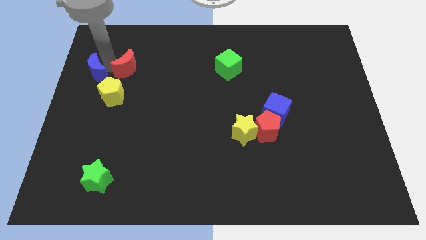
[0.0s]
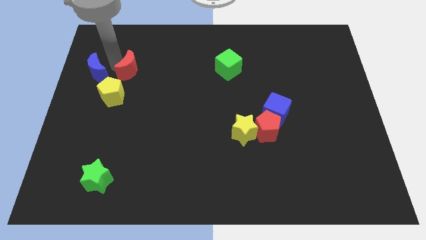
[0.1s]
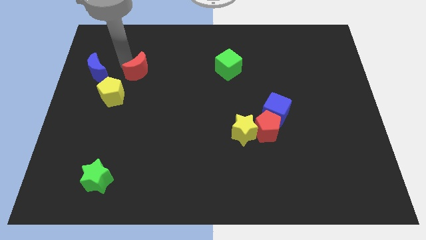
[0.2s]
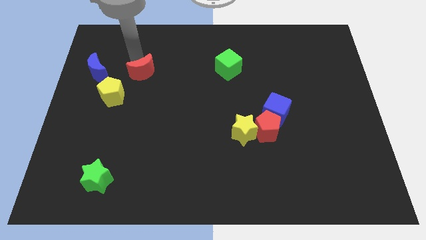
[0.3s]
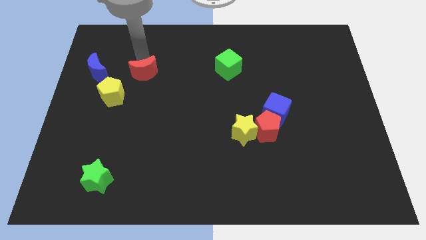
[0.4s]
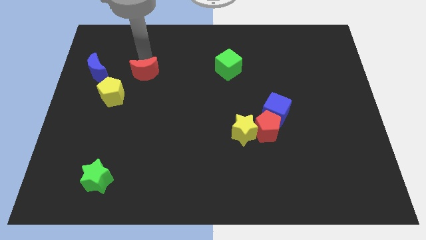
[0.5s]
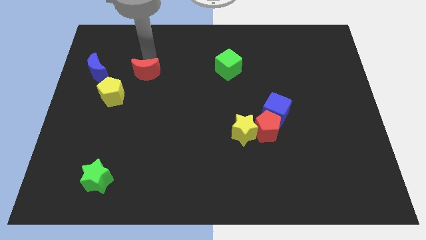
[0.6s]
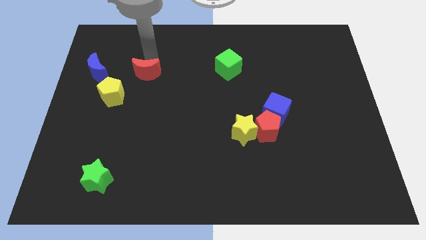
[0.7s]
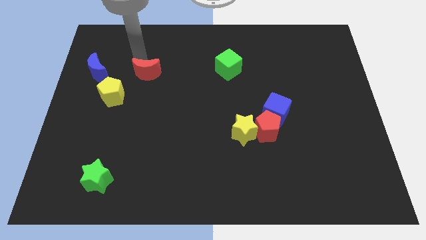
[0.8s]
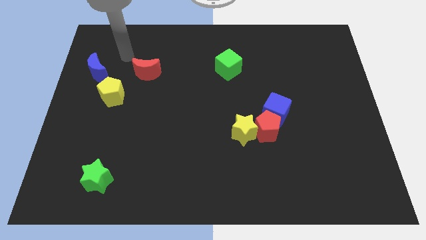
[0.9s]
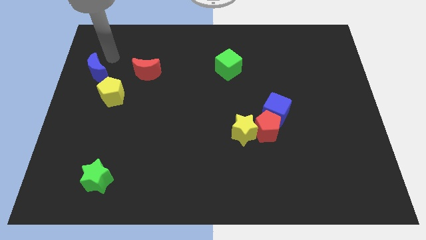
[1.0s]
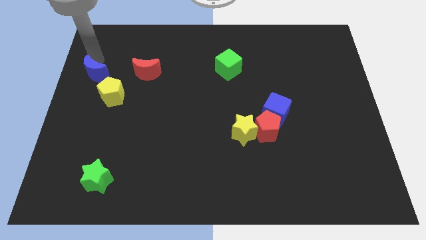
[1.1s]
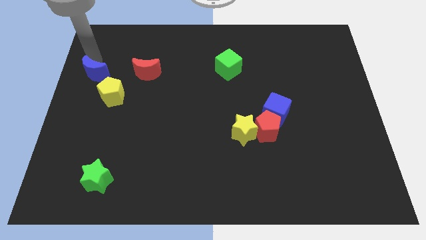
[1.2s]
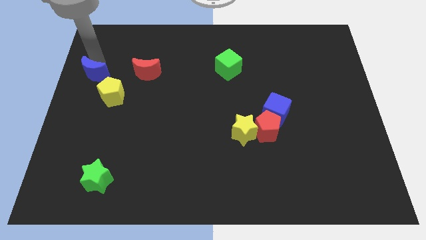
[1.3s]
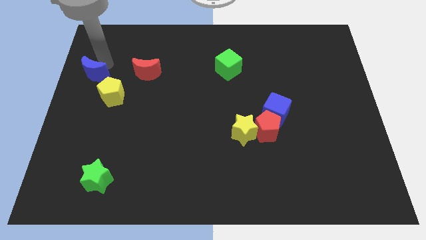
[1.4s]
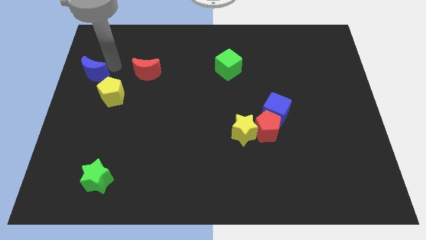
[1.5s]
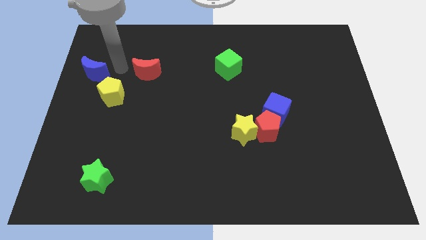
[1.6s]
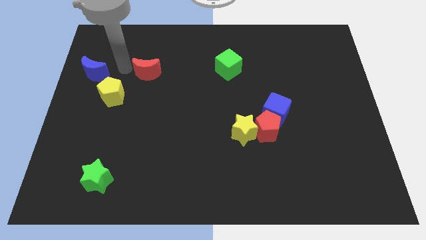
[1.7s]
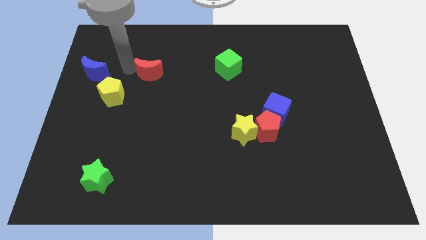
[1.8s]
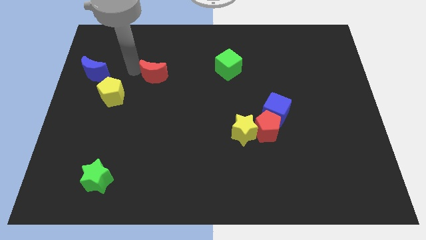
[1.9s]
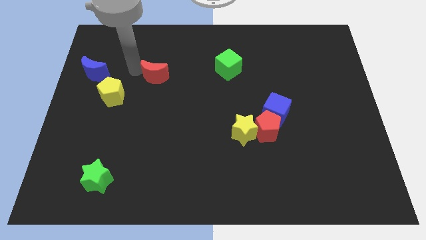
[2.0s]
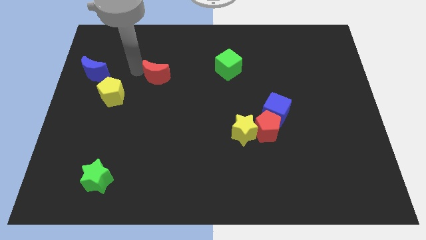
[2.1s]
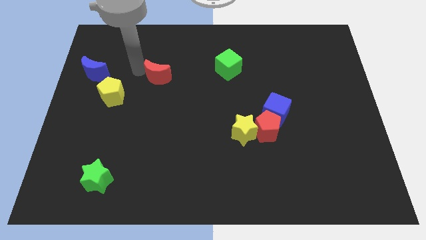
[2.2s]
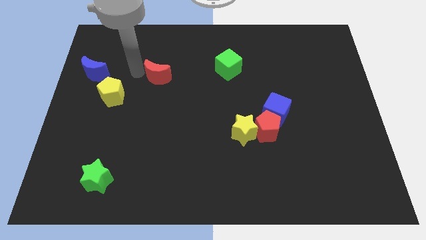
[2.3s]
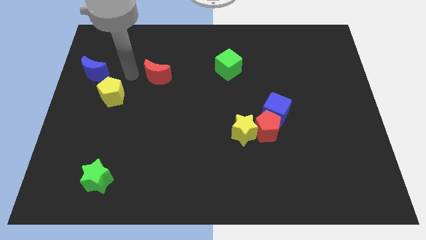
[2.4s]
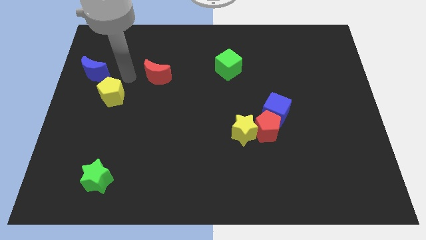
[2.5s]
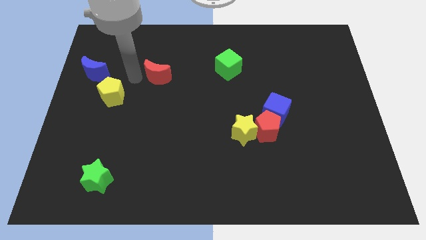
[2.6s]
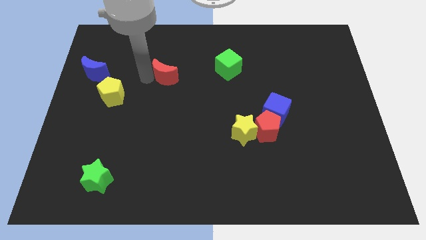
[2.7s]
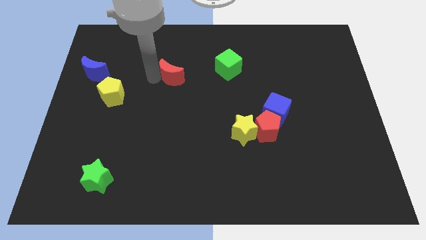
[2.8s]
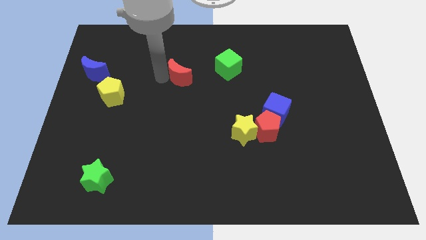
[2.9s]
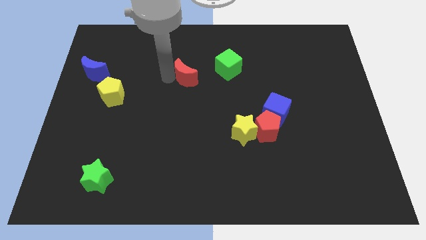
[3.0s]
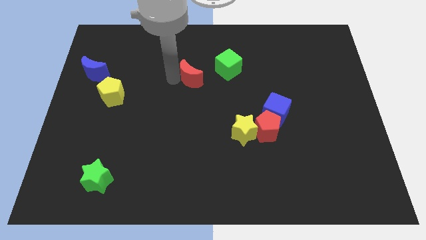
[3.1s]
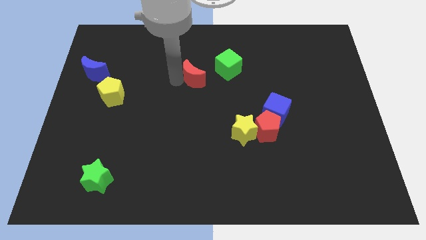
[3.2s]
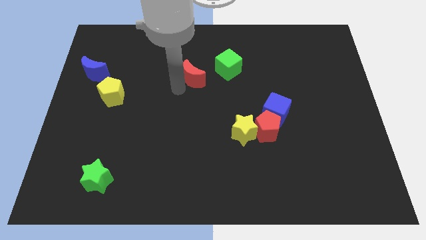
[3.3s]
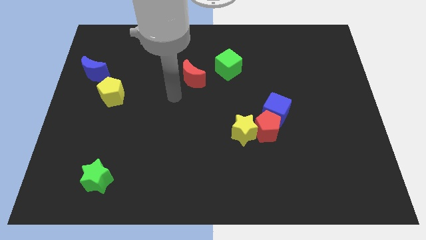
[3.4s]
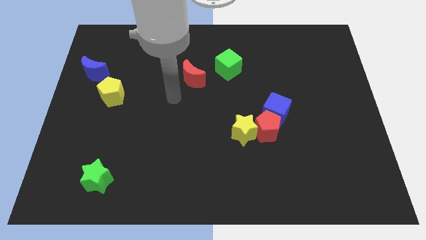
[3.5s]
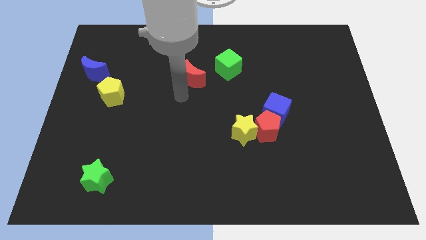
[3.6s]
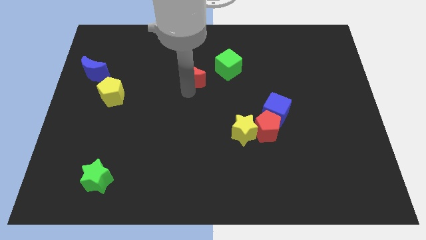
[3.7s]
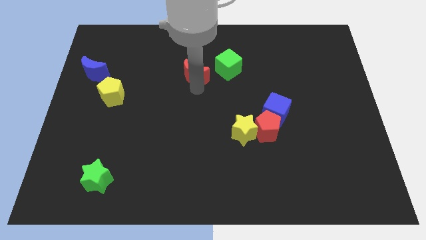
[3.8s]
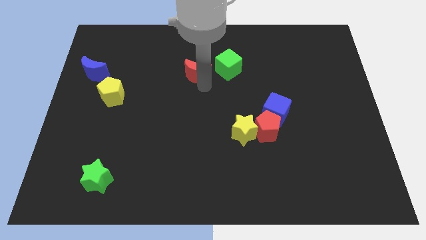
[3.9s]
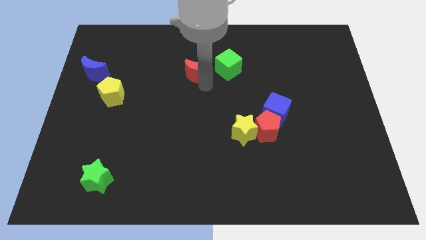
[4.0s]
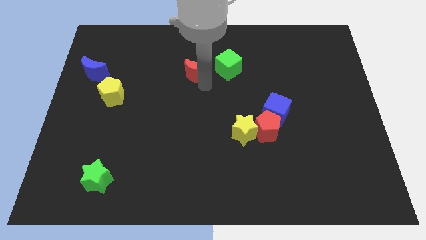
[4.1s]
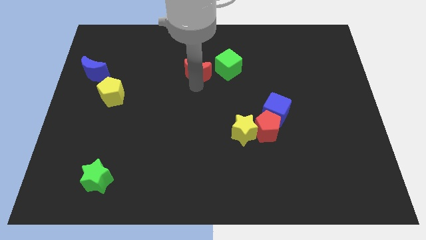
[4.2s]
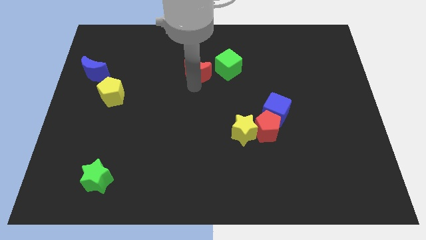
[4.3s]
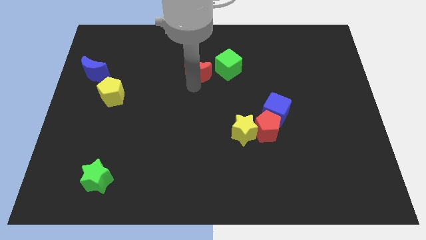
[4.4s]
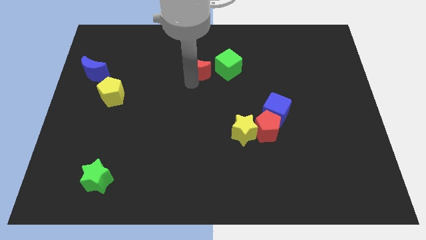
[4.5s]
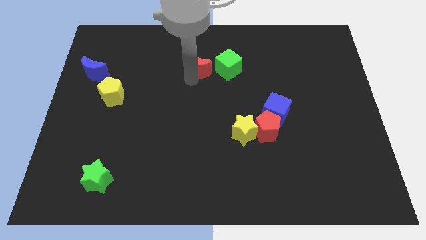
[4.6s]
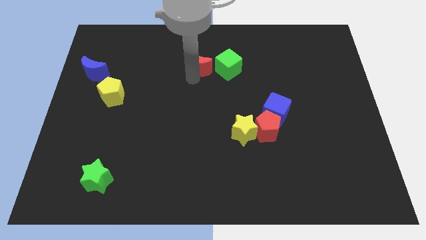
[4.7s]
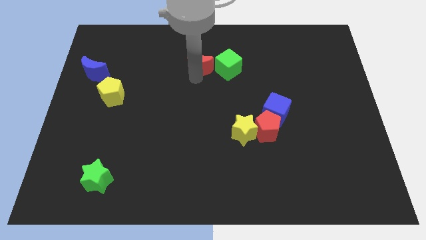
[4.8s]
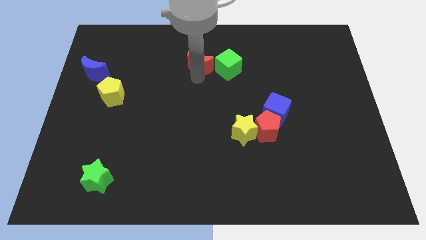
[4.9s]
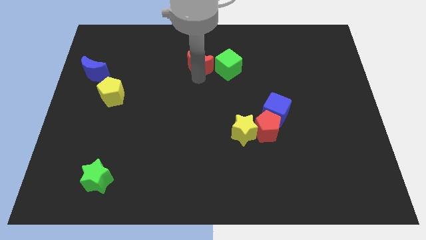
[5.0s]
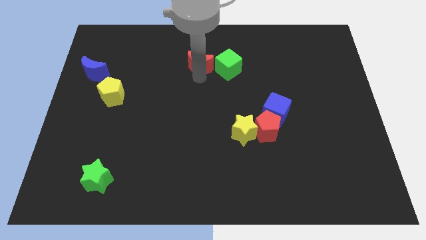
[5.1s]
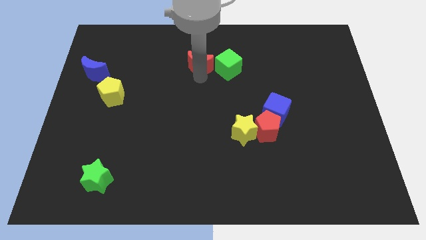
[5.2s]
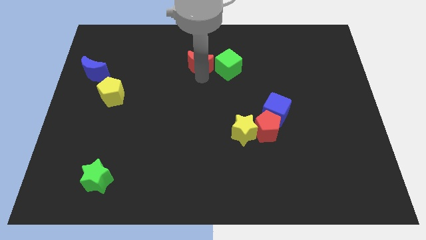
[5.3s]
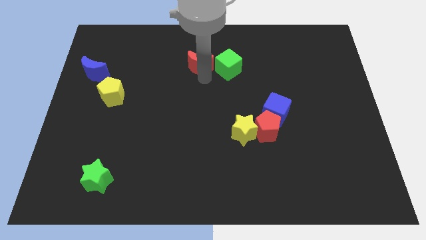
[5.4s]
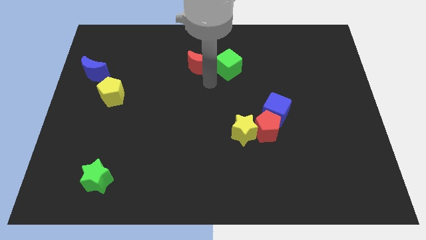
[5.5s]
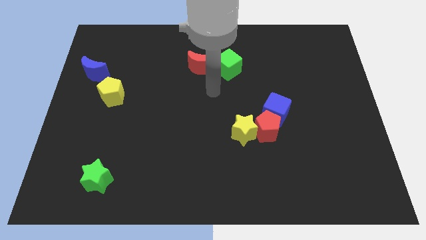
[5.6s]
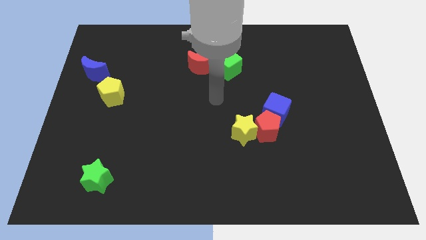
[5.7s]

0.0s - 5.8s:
place the red moon left to the green cube

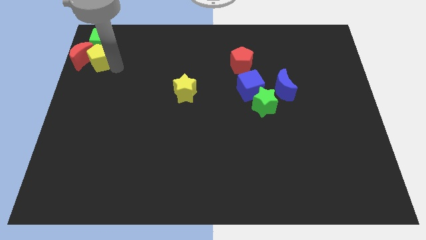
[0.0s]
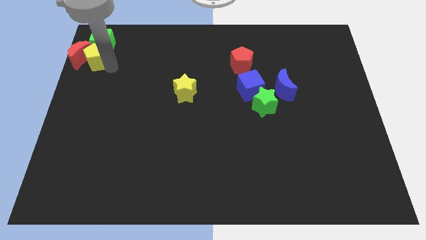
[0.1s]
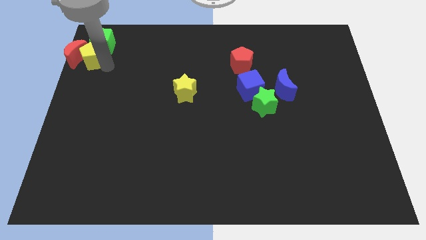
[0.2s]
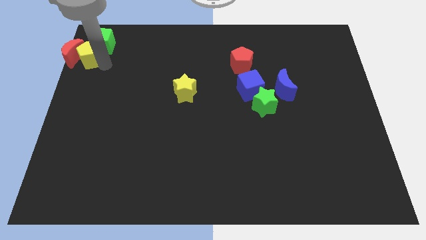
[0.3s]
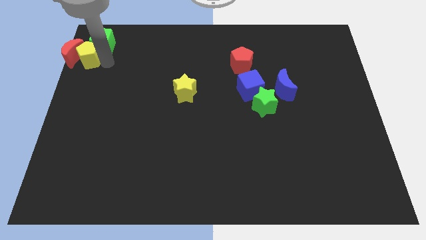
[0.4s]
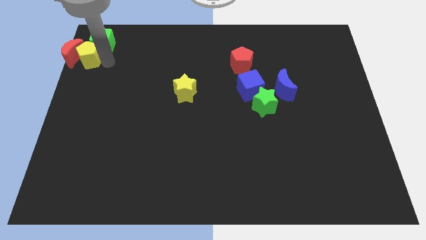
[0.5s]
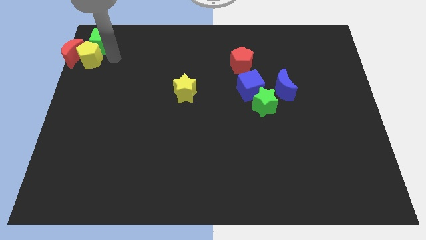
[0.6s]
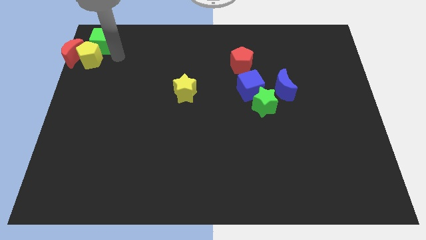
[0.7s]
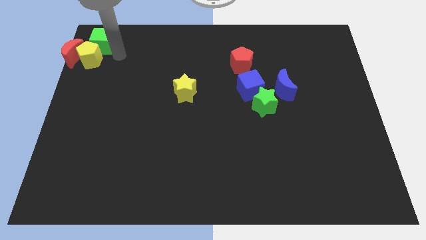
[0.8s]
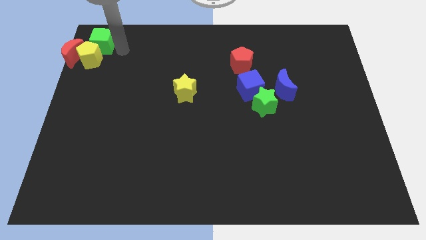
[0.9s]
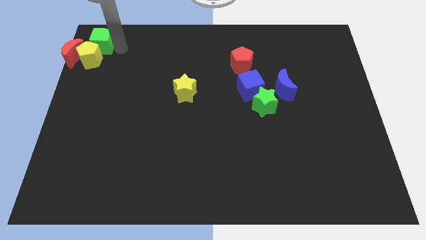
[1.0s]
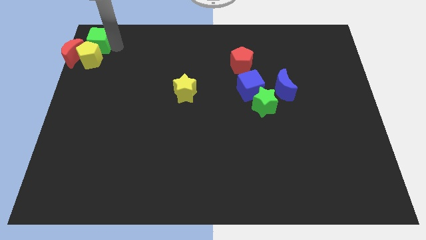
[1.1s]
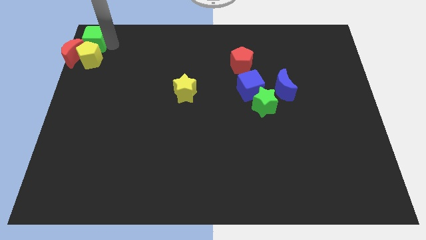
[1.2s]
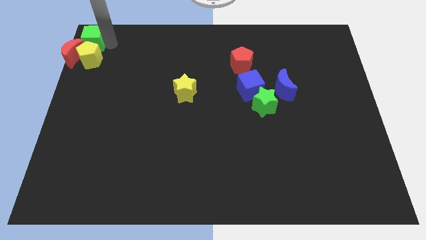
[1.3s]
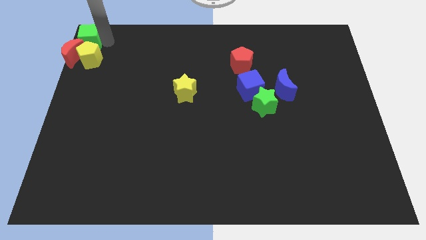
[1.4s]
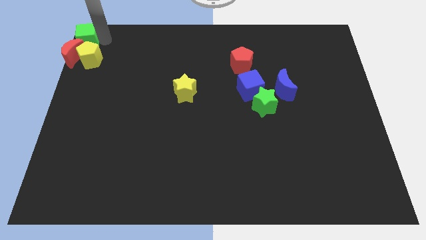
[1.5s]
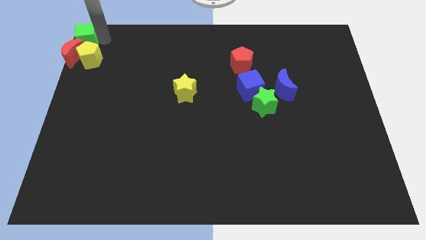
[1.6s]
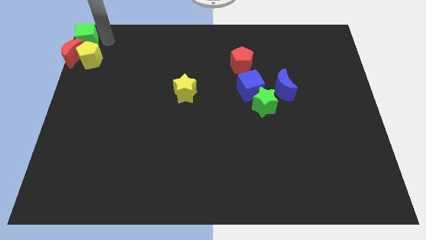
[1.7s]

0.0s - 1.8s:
place the green cube red crescent and yellow pentagon at the top left corner of the board

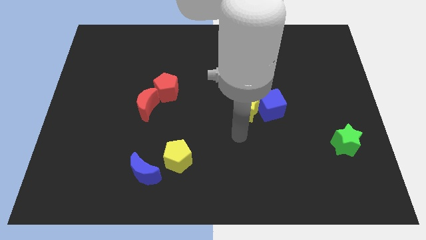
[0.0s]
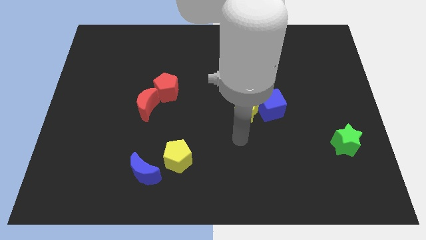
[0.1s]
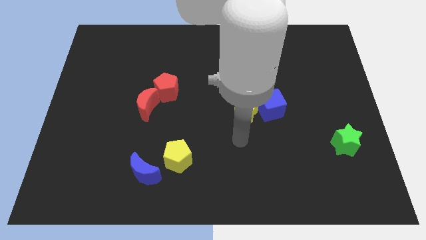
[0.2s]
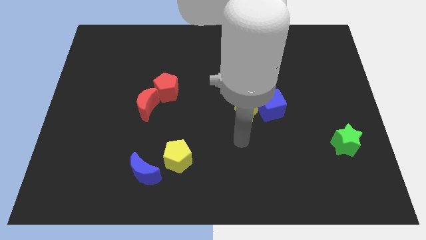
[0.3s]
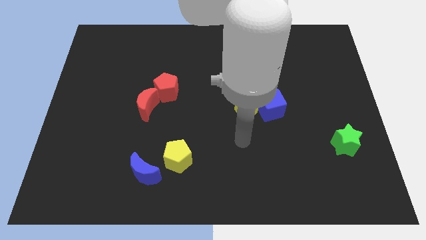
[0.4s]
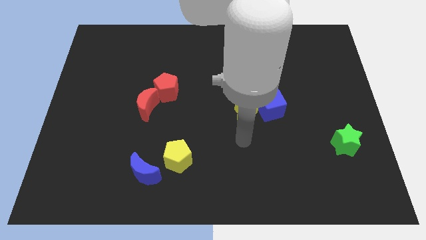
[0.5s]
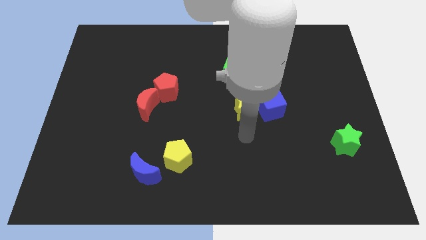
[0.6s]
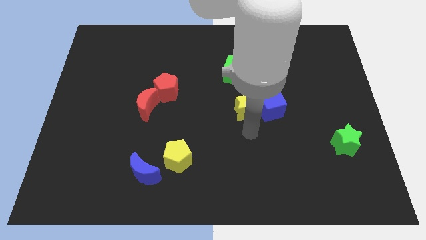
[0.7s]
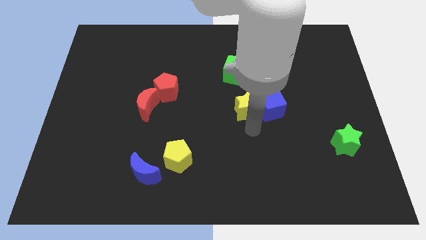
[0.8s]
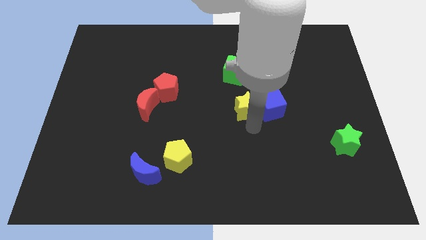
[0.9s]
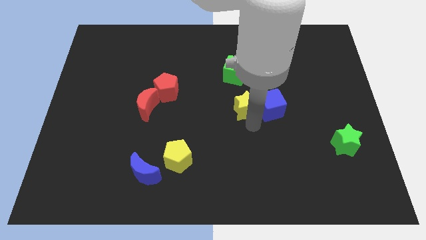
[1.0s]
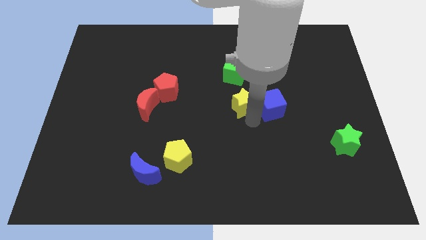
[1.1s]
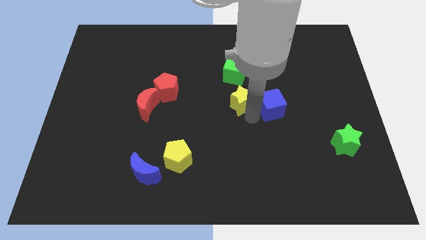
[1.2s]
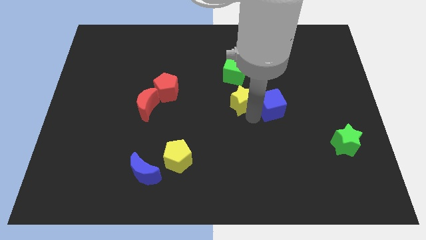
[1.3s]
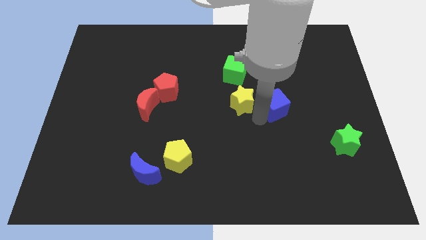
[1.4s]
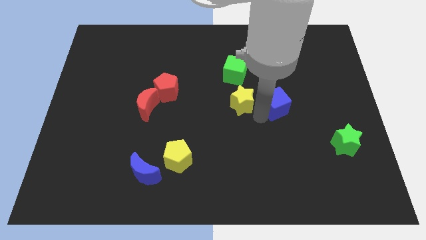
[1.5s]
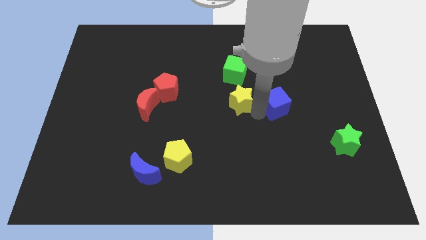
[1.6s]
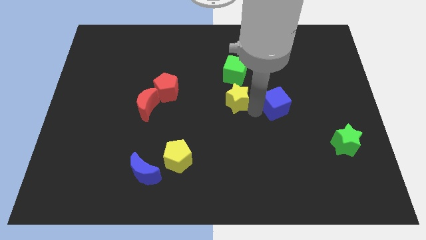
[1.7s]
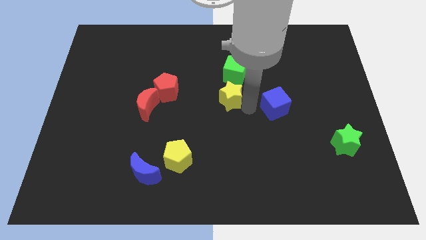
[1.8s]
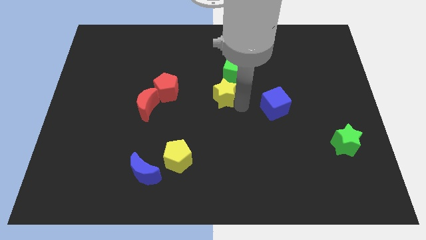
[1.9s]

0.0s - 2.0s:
adjust the yellow star at the bottom of the green cube
